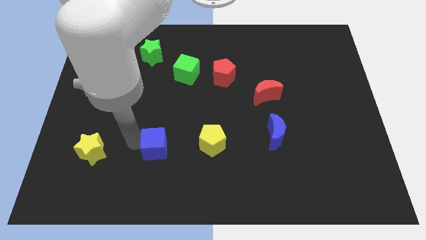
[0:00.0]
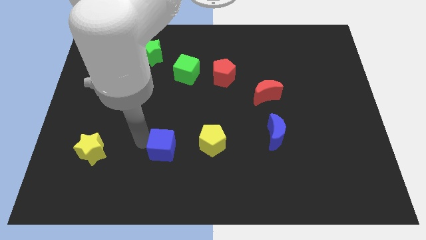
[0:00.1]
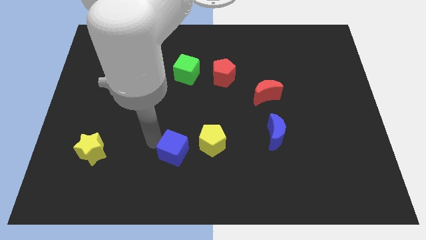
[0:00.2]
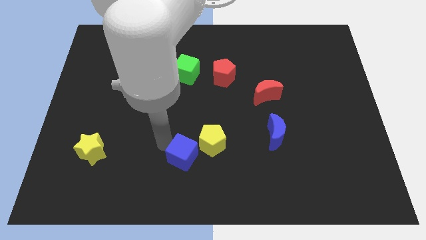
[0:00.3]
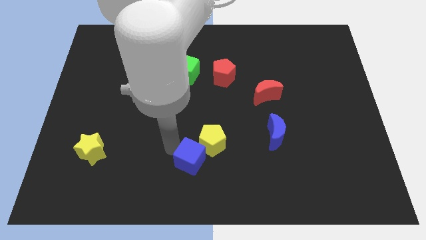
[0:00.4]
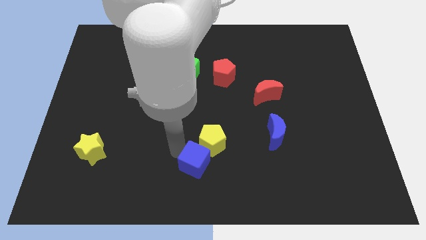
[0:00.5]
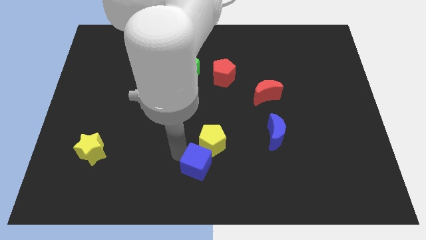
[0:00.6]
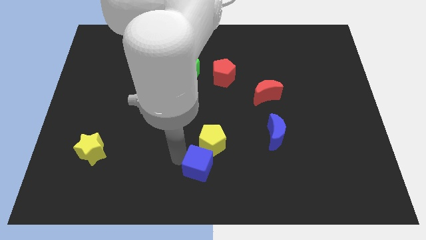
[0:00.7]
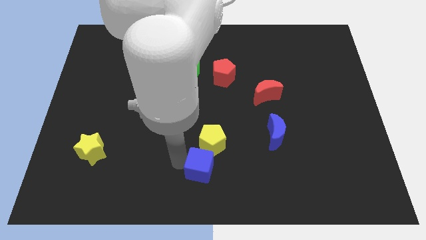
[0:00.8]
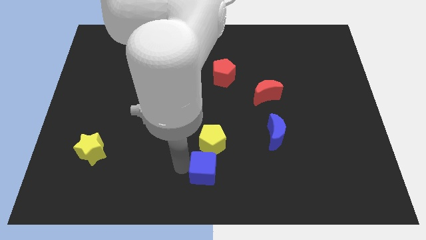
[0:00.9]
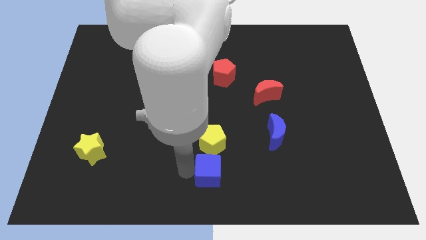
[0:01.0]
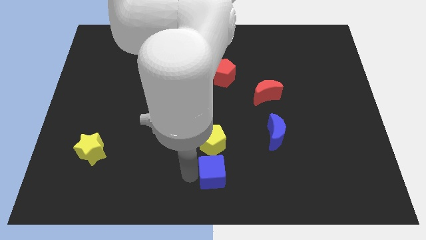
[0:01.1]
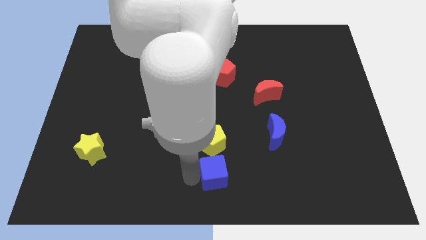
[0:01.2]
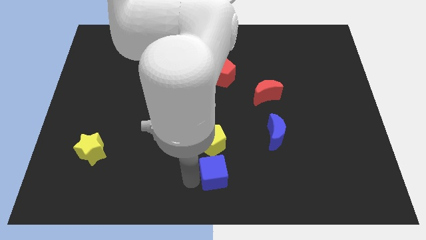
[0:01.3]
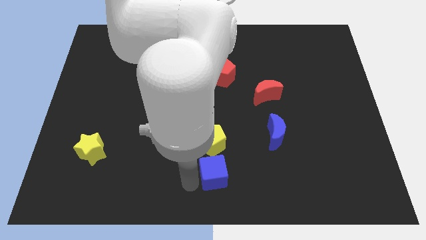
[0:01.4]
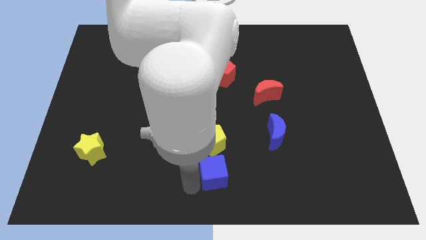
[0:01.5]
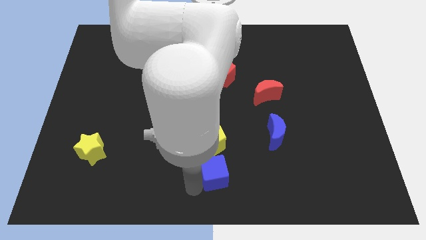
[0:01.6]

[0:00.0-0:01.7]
move the blue cube below the yellow pentagon

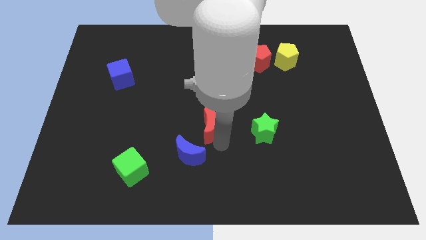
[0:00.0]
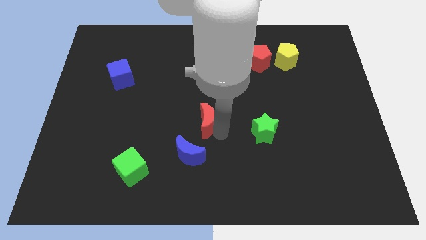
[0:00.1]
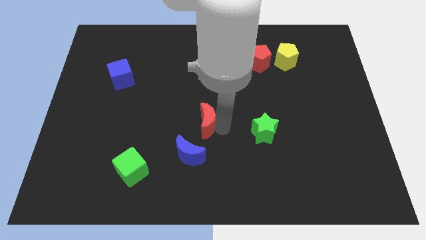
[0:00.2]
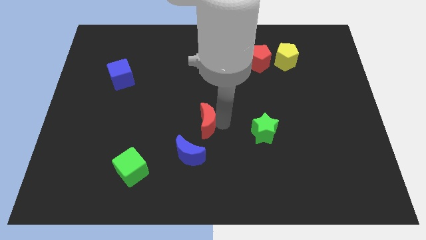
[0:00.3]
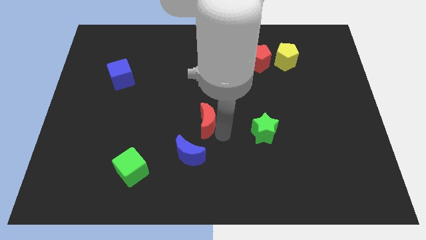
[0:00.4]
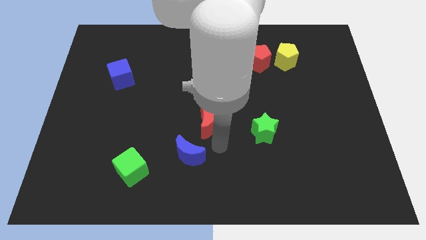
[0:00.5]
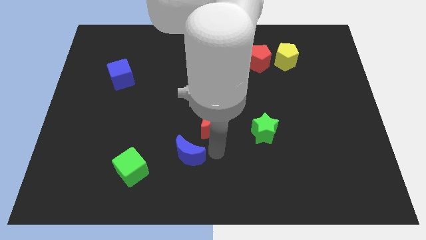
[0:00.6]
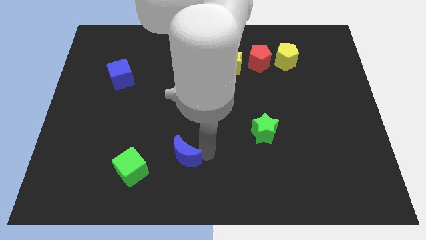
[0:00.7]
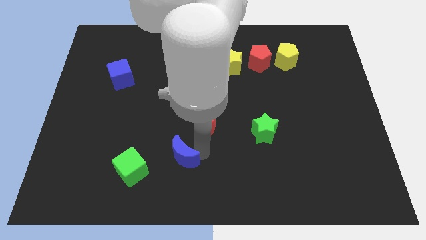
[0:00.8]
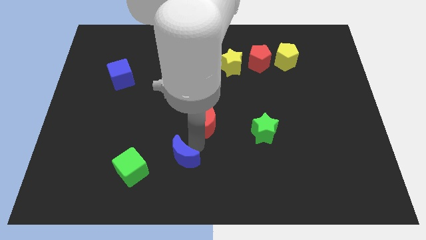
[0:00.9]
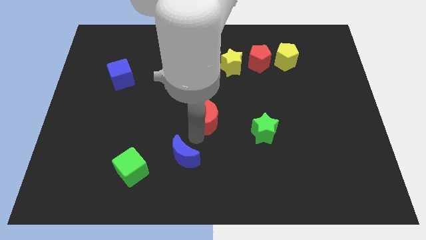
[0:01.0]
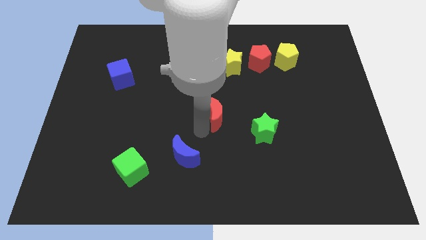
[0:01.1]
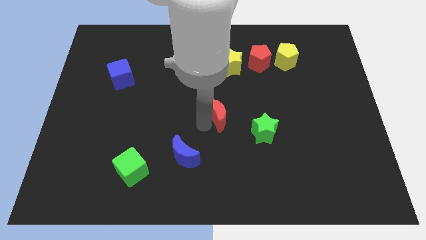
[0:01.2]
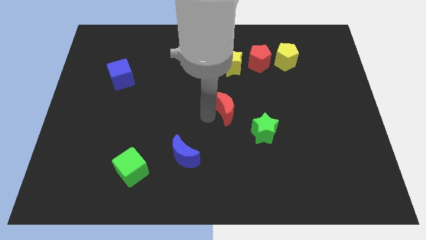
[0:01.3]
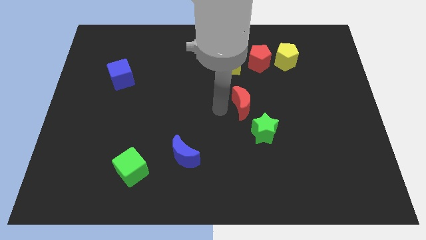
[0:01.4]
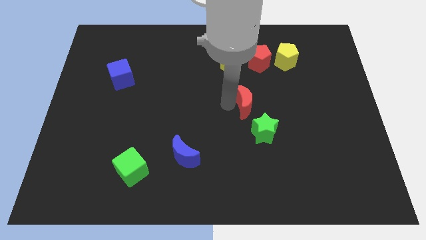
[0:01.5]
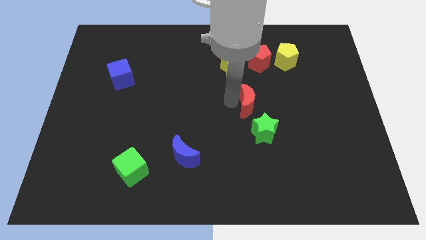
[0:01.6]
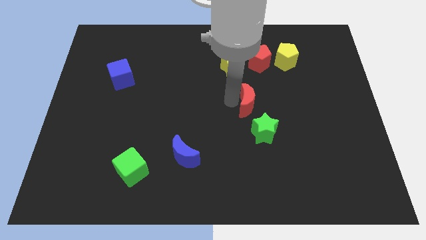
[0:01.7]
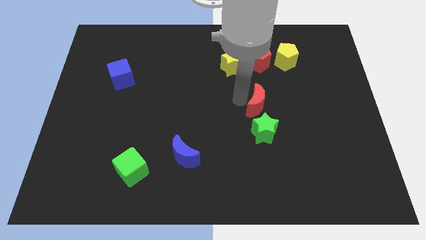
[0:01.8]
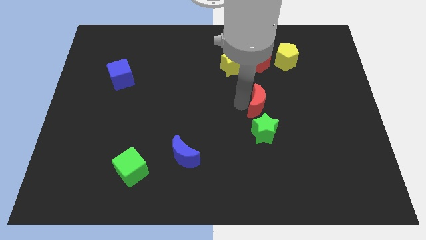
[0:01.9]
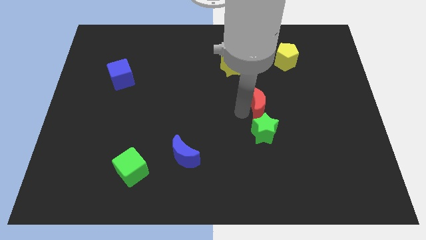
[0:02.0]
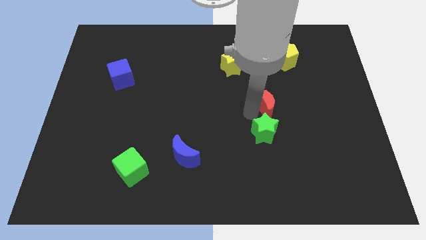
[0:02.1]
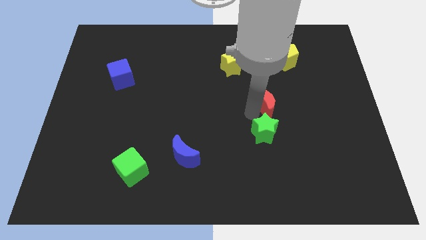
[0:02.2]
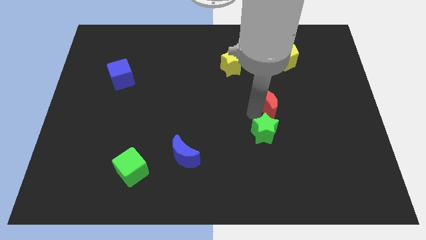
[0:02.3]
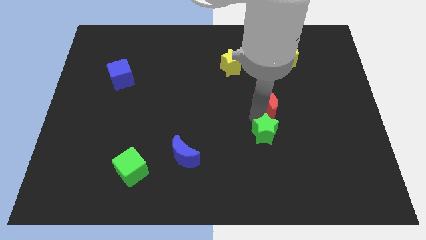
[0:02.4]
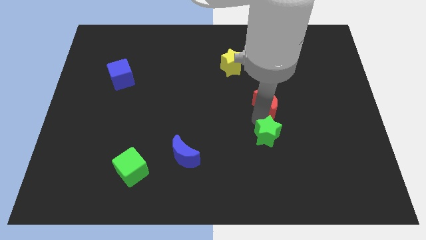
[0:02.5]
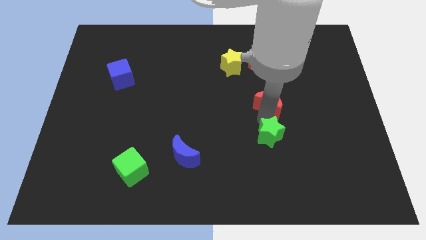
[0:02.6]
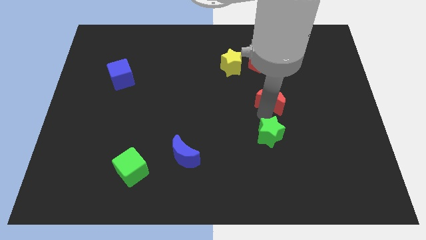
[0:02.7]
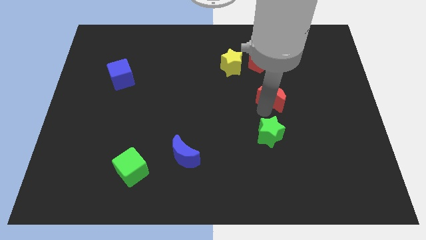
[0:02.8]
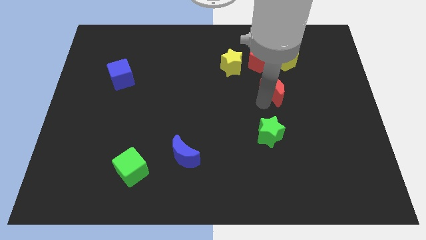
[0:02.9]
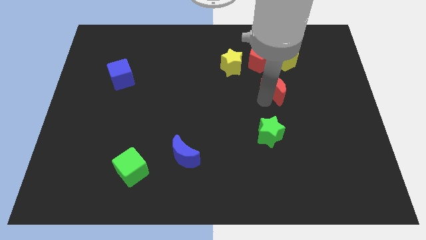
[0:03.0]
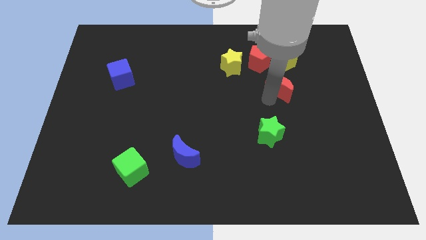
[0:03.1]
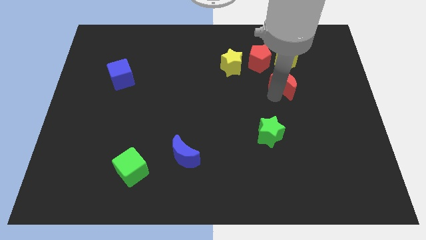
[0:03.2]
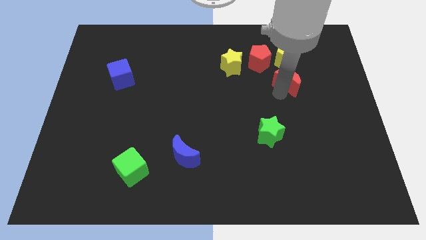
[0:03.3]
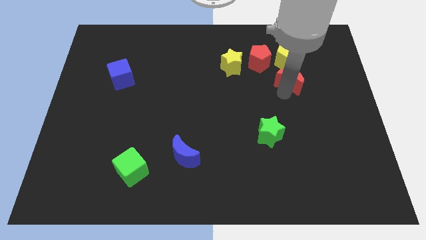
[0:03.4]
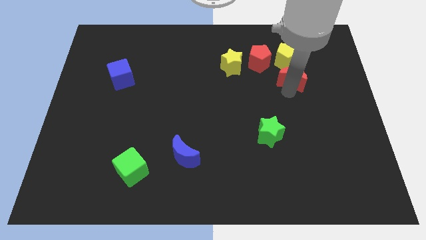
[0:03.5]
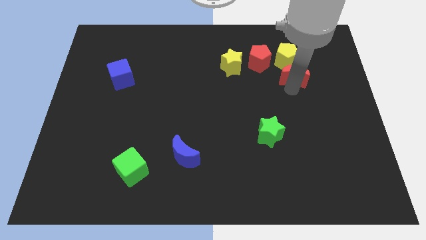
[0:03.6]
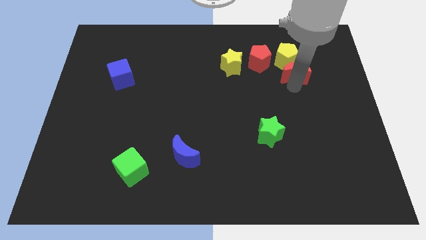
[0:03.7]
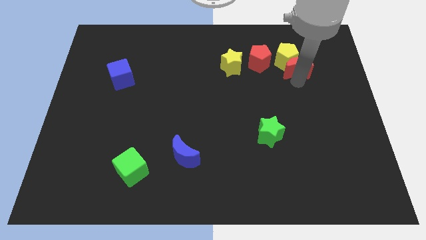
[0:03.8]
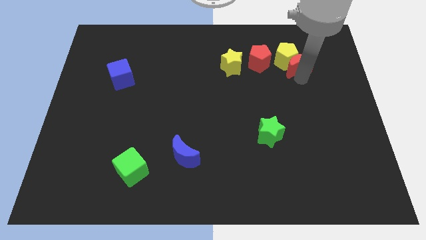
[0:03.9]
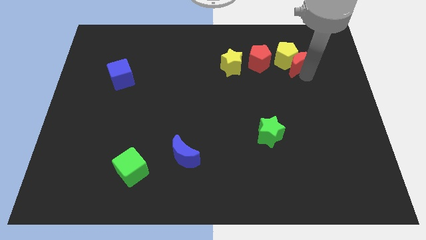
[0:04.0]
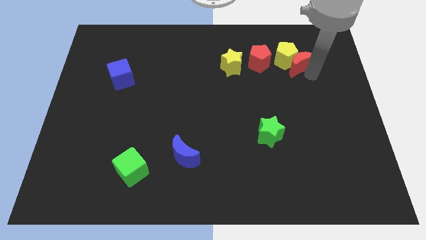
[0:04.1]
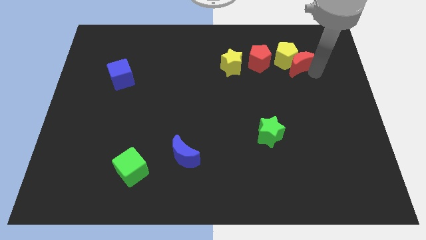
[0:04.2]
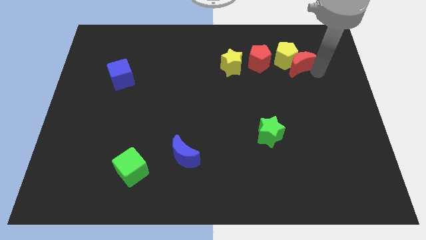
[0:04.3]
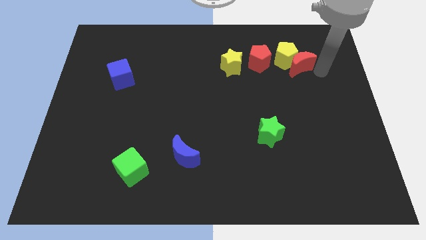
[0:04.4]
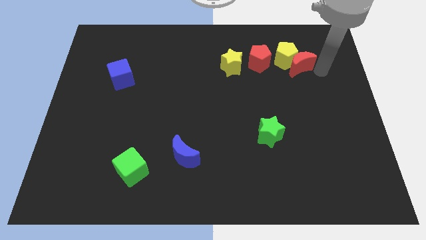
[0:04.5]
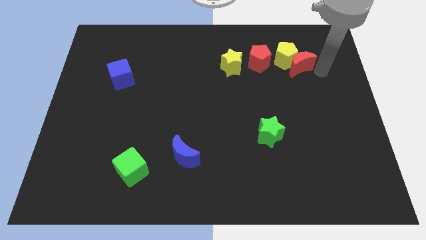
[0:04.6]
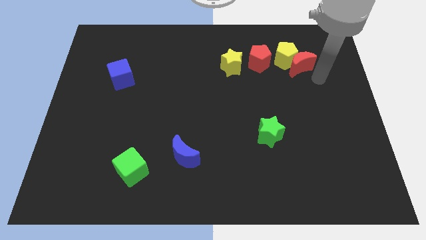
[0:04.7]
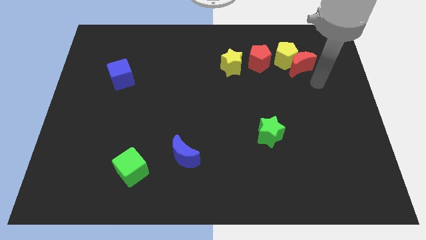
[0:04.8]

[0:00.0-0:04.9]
move the red crescent into the yellow pentagon

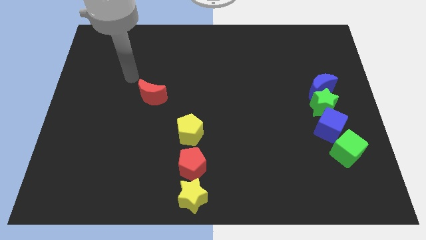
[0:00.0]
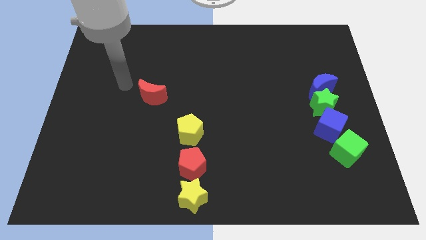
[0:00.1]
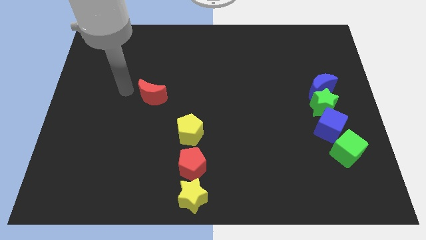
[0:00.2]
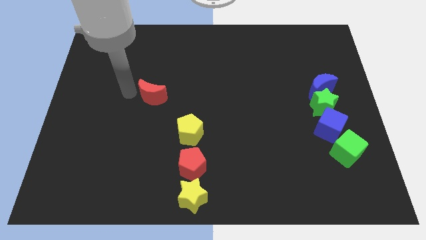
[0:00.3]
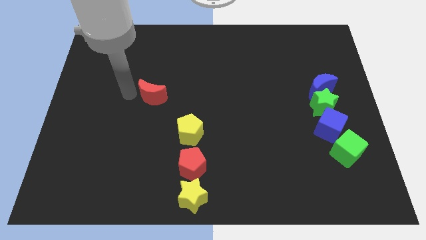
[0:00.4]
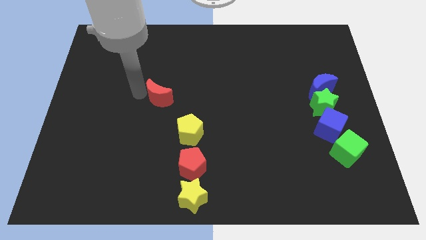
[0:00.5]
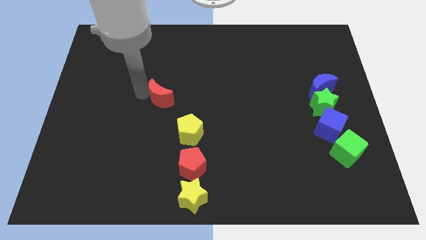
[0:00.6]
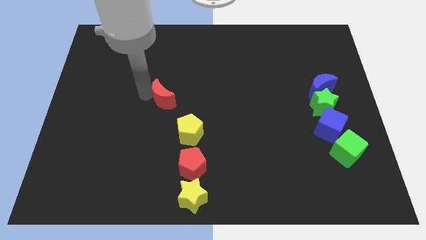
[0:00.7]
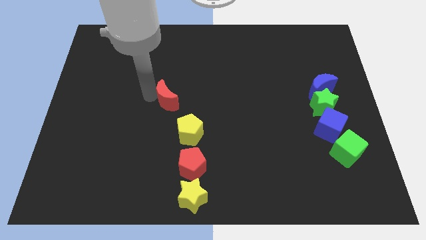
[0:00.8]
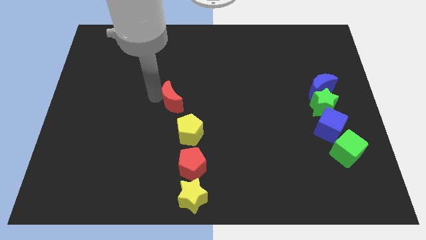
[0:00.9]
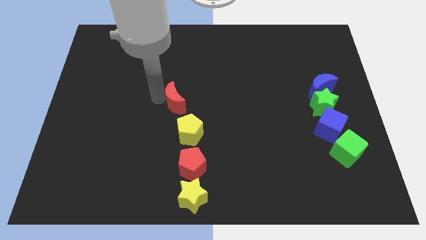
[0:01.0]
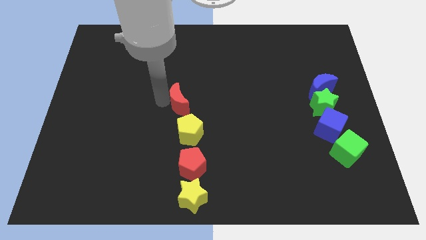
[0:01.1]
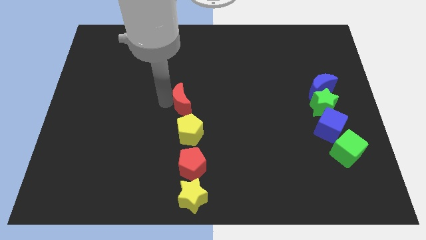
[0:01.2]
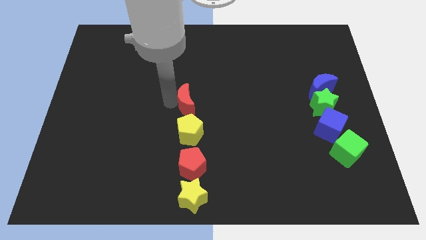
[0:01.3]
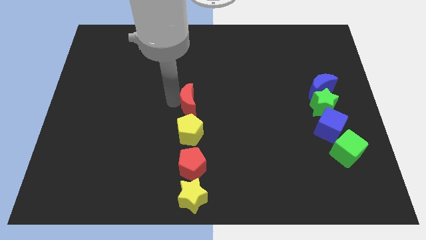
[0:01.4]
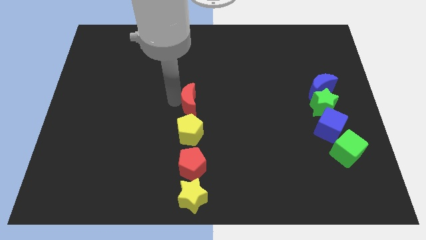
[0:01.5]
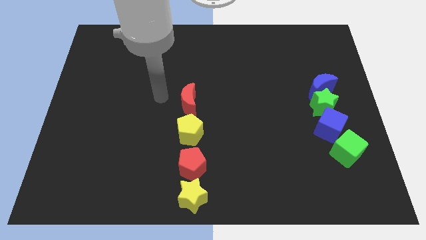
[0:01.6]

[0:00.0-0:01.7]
move the red crescent to the top of the yellow pentagon

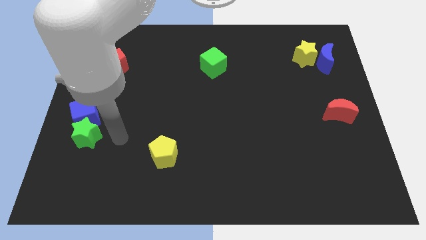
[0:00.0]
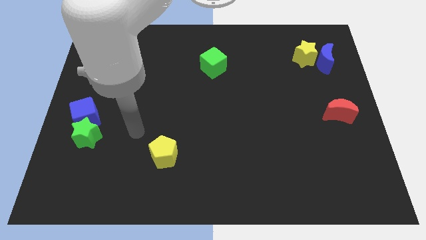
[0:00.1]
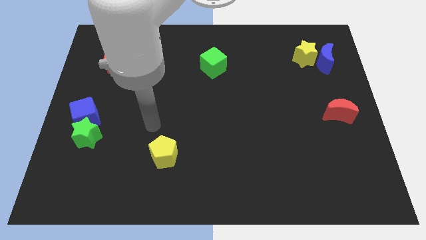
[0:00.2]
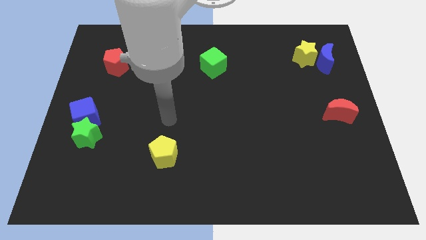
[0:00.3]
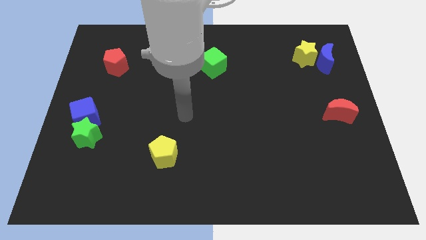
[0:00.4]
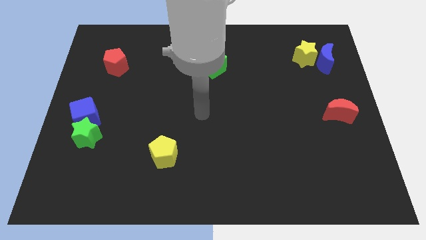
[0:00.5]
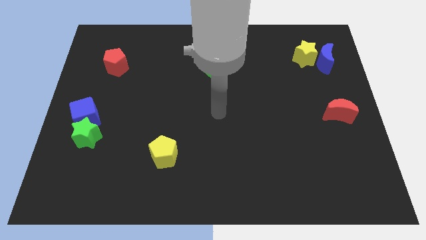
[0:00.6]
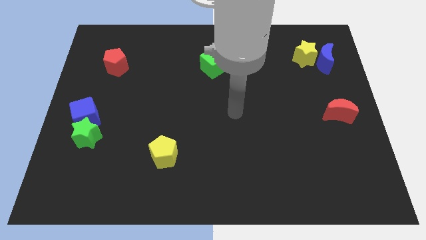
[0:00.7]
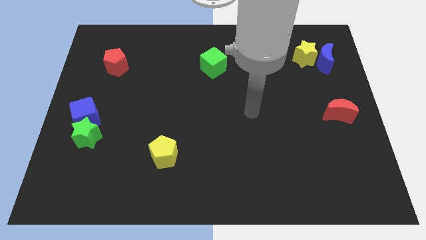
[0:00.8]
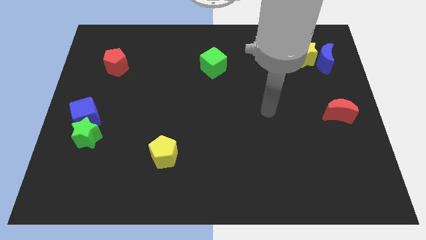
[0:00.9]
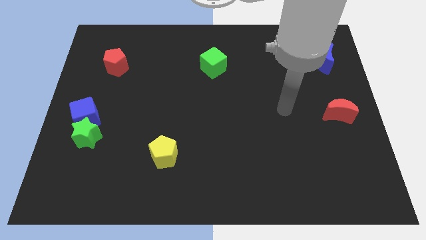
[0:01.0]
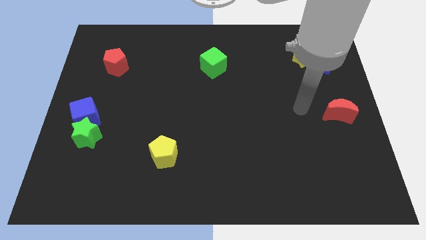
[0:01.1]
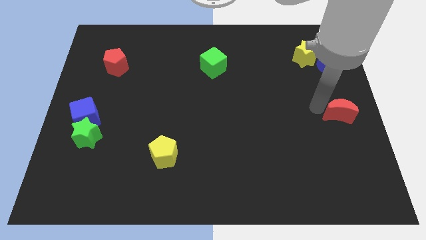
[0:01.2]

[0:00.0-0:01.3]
move your arm towards the red moon
